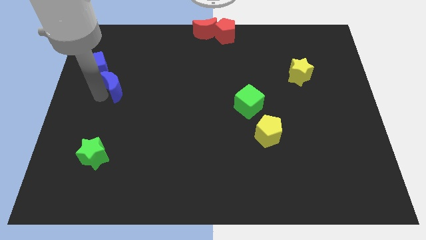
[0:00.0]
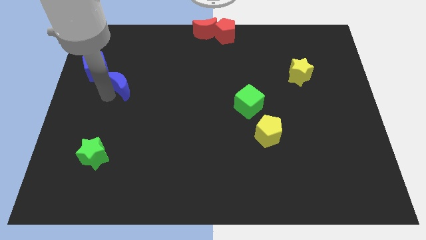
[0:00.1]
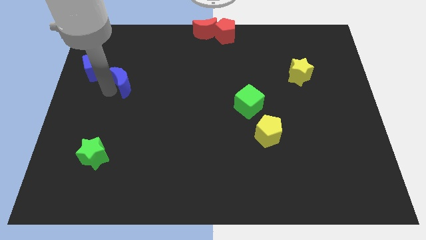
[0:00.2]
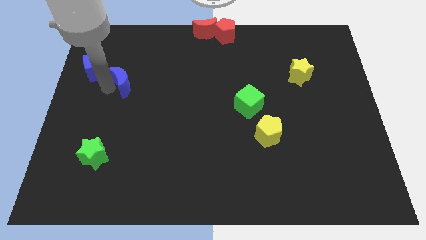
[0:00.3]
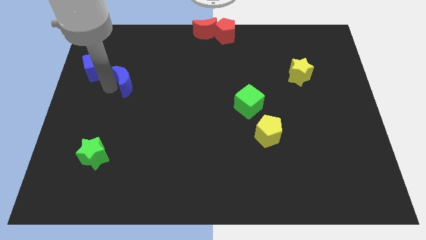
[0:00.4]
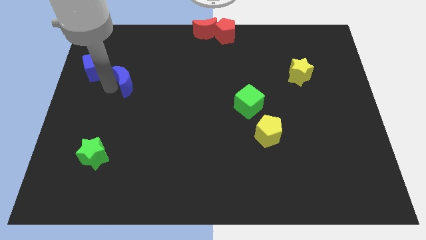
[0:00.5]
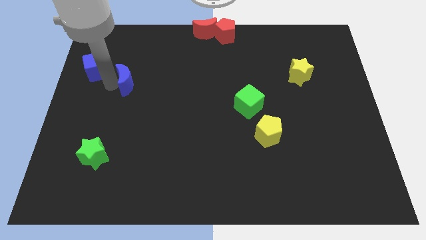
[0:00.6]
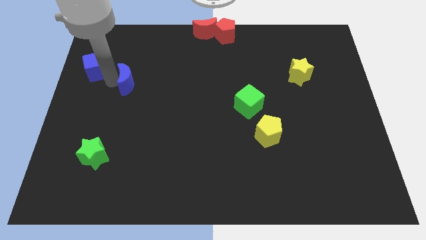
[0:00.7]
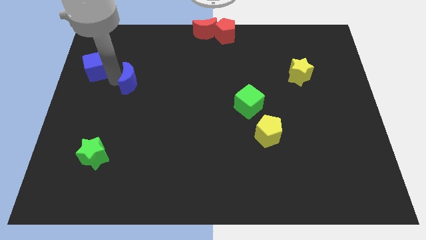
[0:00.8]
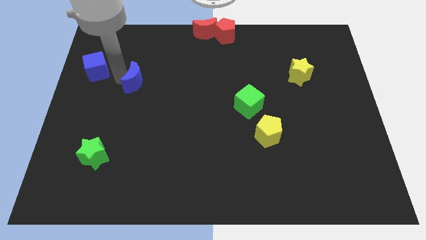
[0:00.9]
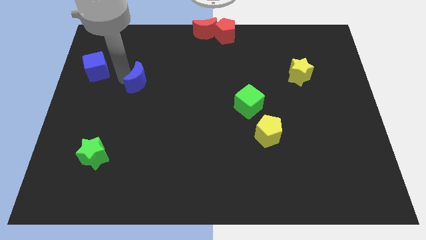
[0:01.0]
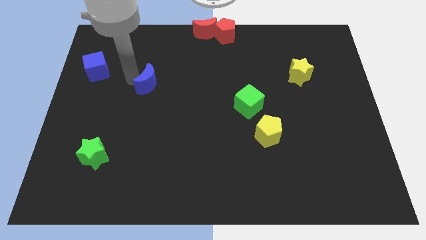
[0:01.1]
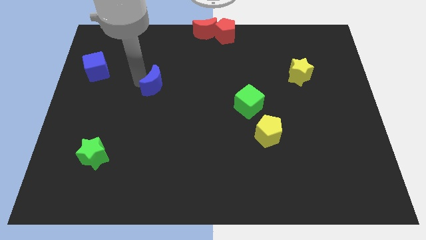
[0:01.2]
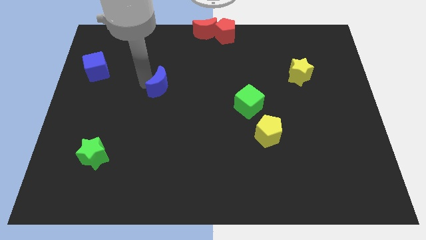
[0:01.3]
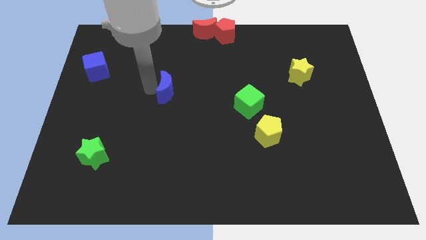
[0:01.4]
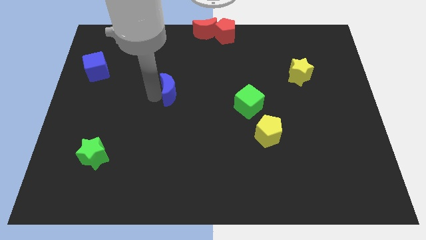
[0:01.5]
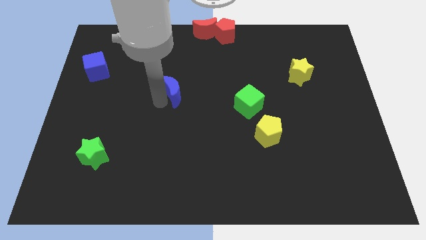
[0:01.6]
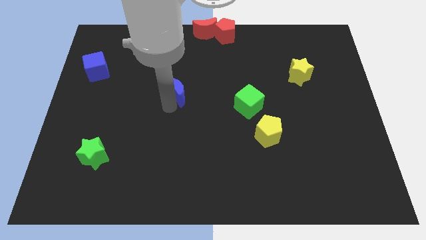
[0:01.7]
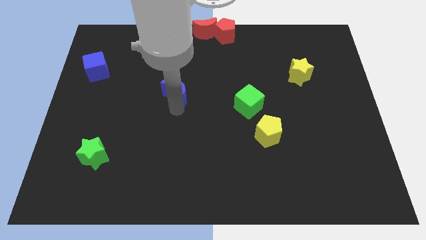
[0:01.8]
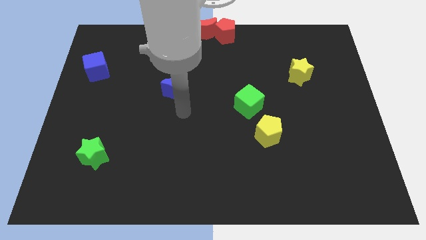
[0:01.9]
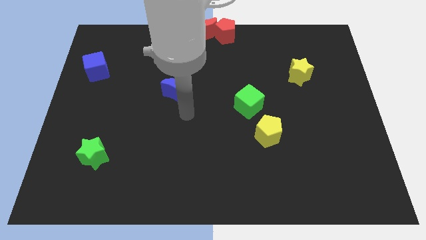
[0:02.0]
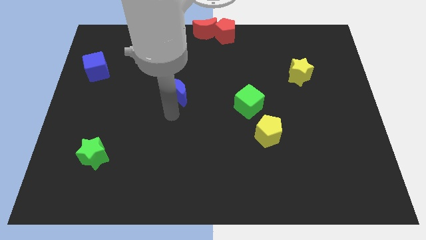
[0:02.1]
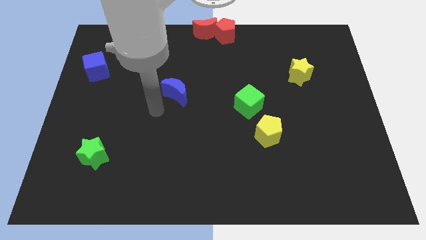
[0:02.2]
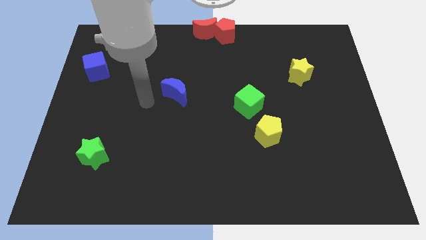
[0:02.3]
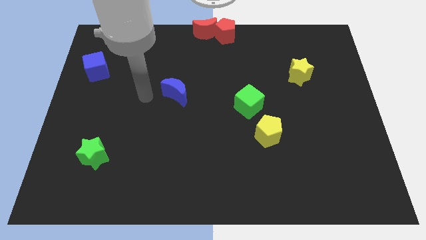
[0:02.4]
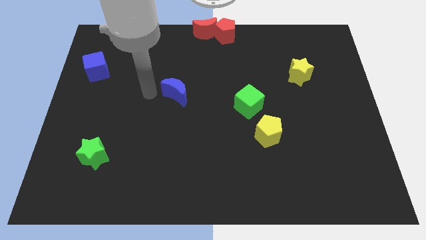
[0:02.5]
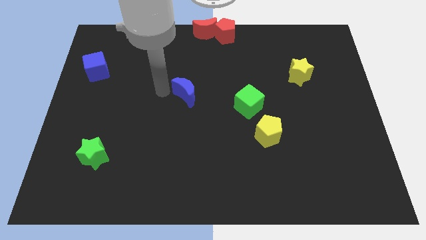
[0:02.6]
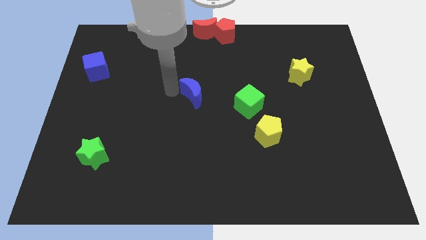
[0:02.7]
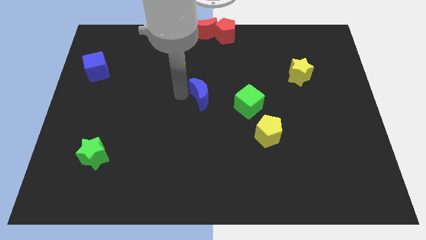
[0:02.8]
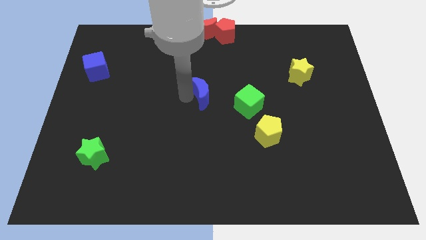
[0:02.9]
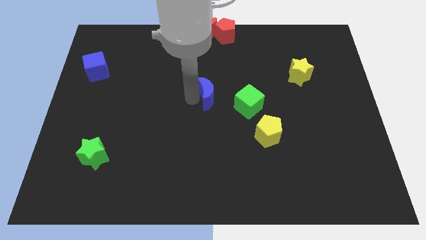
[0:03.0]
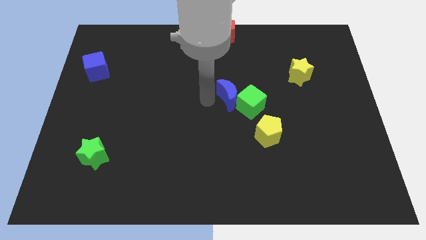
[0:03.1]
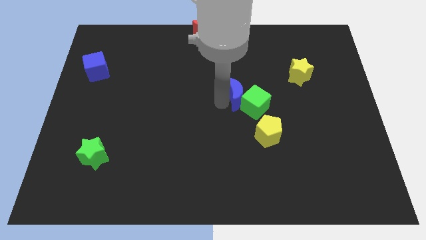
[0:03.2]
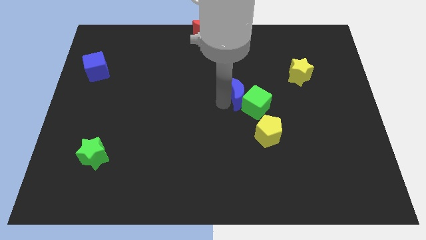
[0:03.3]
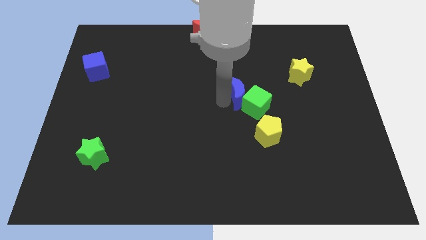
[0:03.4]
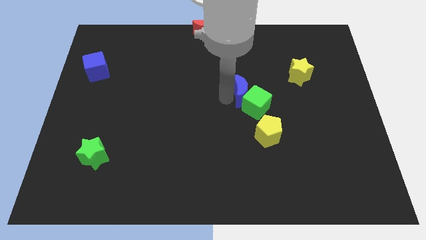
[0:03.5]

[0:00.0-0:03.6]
push the blue moon into green cube

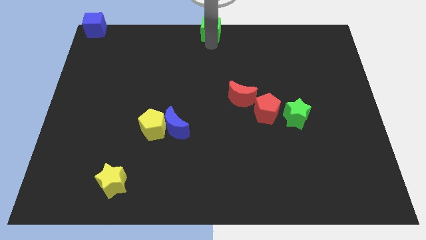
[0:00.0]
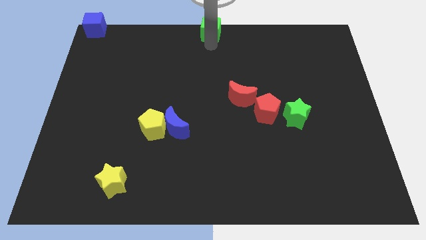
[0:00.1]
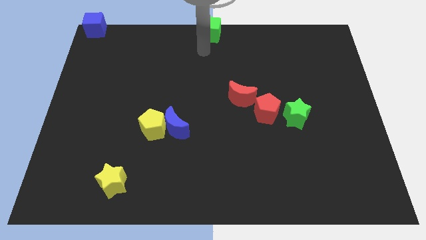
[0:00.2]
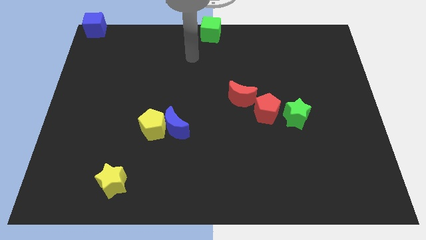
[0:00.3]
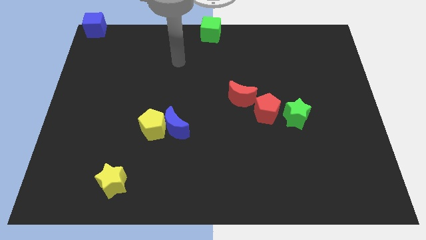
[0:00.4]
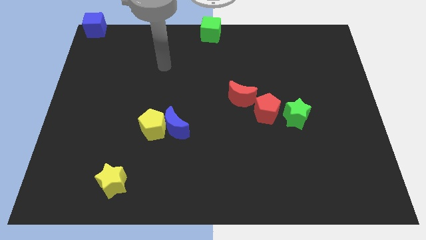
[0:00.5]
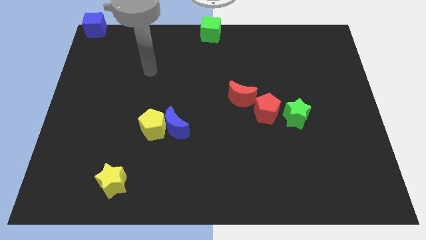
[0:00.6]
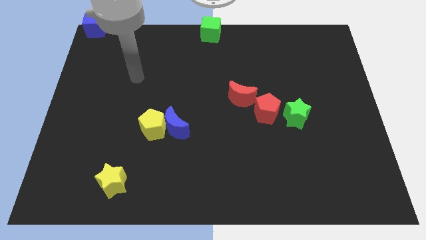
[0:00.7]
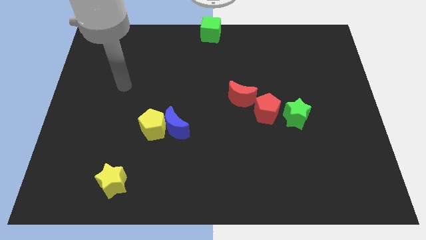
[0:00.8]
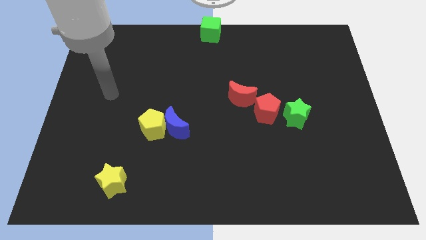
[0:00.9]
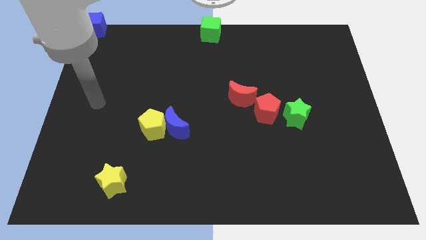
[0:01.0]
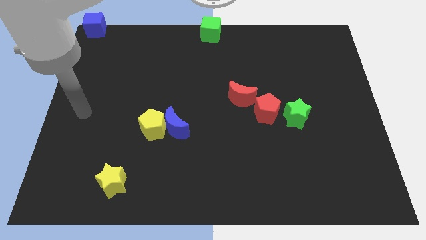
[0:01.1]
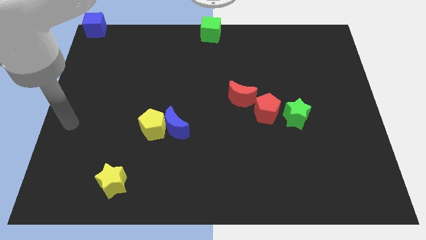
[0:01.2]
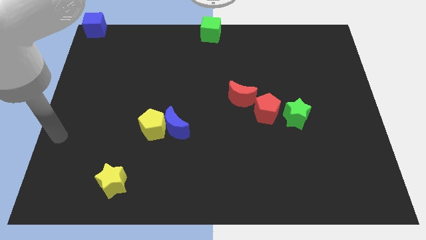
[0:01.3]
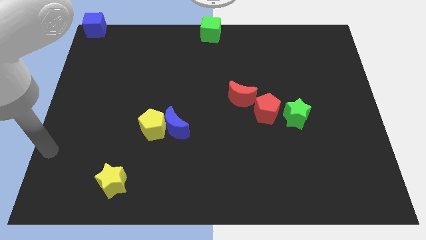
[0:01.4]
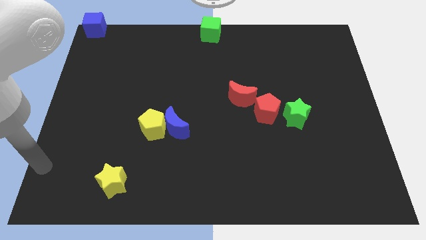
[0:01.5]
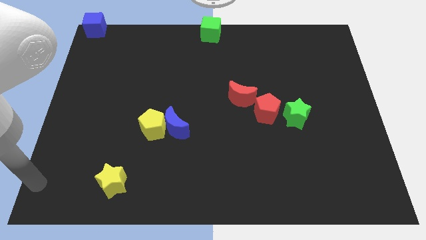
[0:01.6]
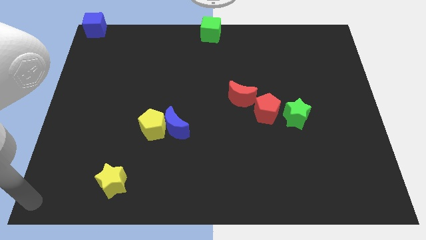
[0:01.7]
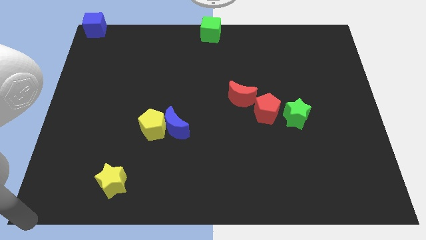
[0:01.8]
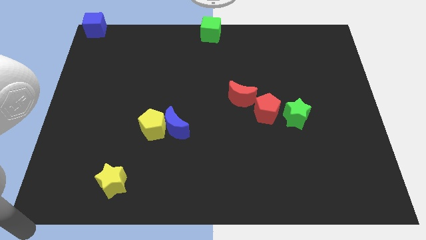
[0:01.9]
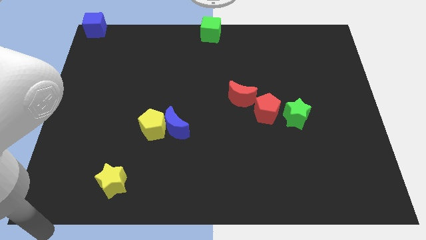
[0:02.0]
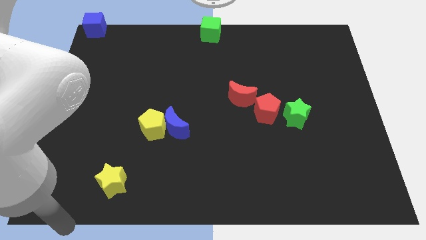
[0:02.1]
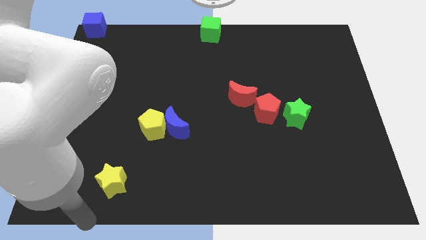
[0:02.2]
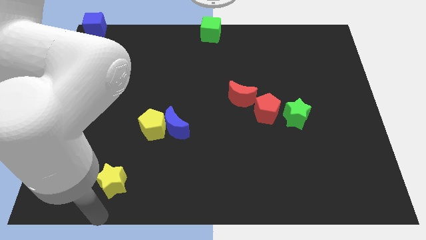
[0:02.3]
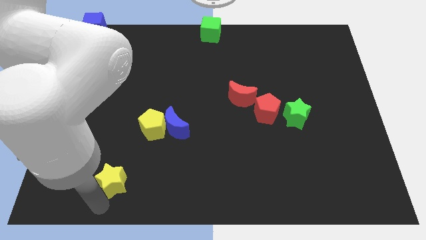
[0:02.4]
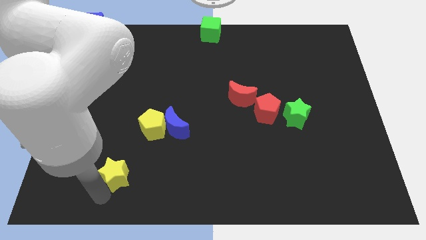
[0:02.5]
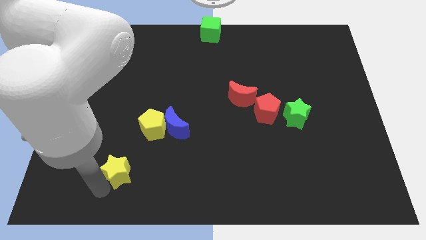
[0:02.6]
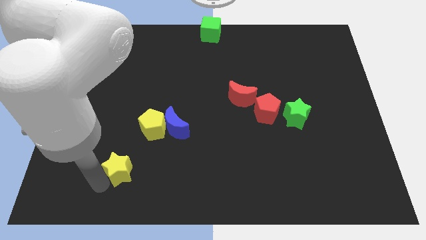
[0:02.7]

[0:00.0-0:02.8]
move your arm away from the green cube

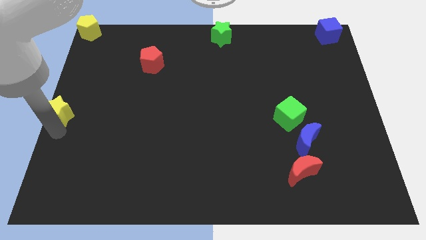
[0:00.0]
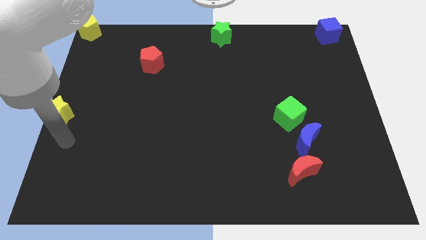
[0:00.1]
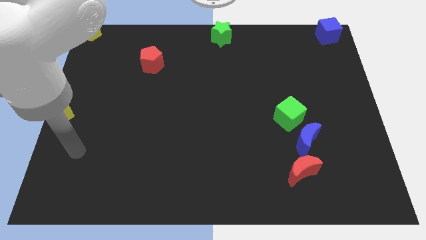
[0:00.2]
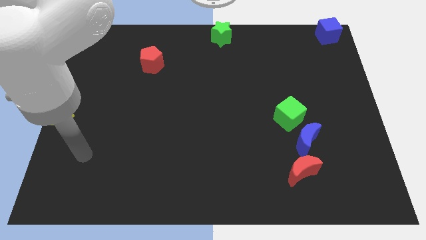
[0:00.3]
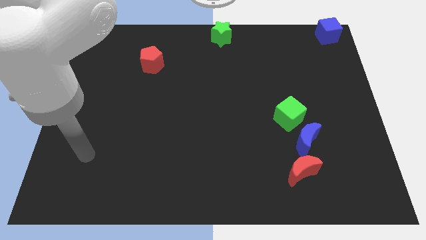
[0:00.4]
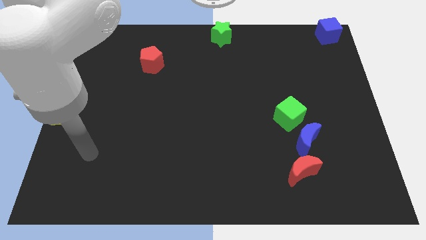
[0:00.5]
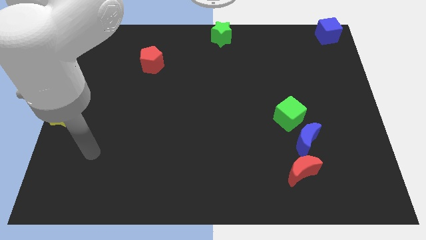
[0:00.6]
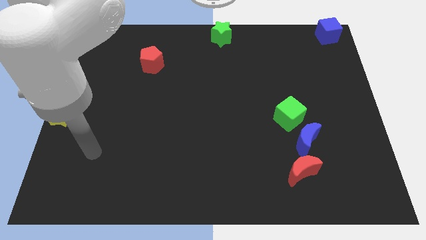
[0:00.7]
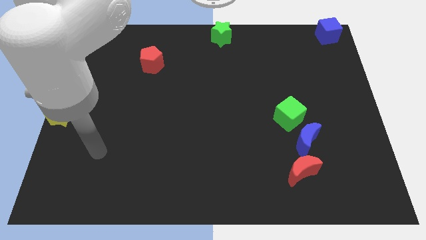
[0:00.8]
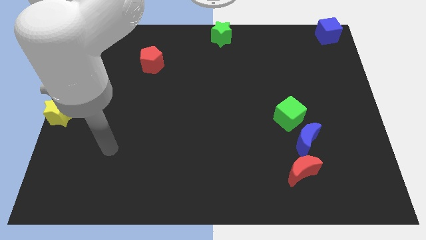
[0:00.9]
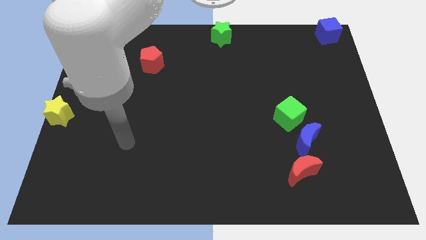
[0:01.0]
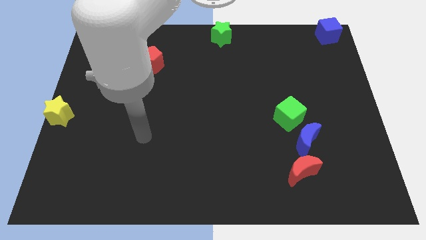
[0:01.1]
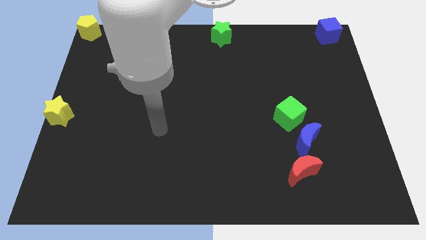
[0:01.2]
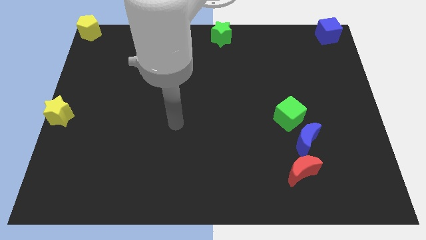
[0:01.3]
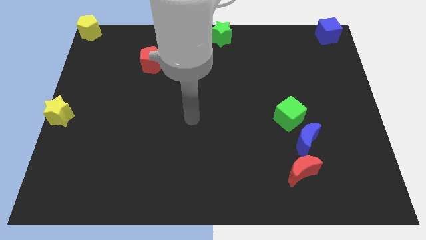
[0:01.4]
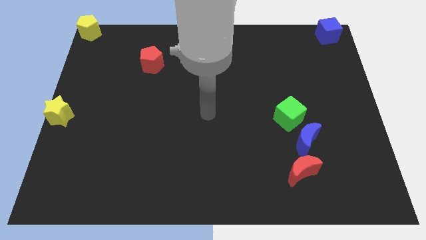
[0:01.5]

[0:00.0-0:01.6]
move your arm away from the yellow star

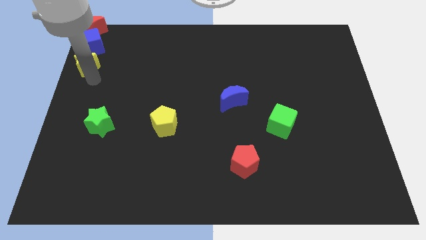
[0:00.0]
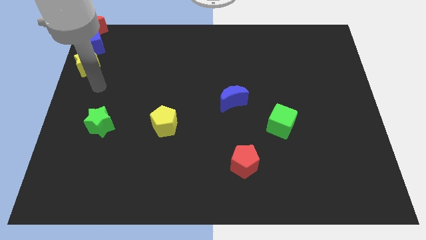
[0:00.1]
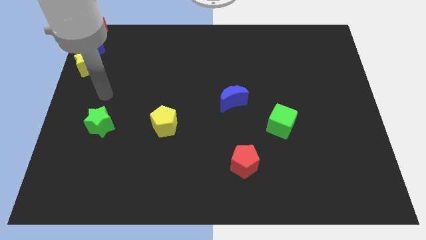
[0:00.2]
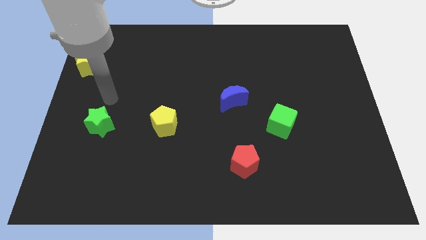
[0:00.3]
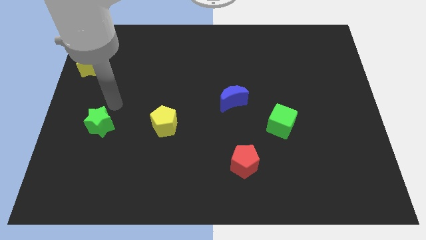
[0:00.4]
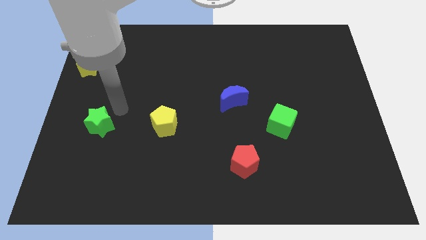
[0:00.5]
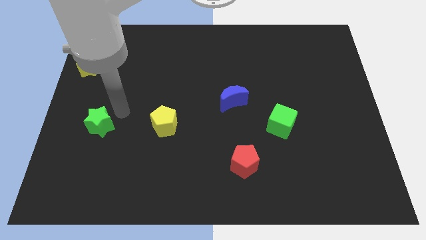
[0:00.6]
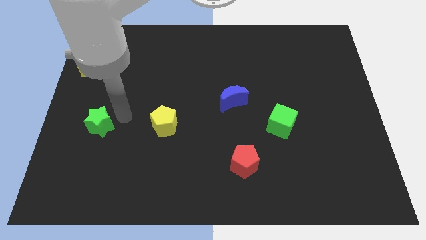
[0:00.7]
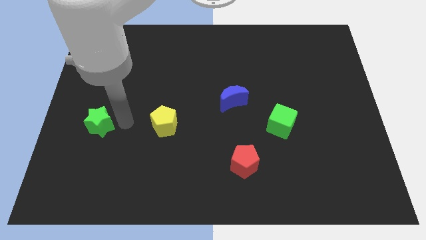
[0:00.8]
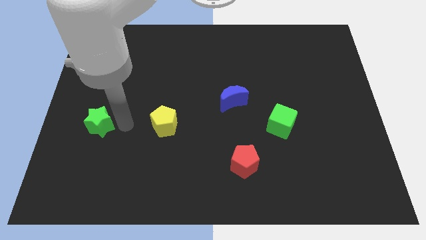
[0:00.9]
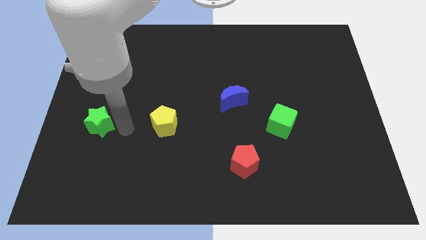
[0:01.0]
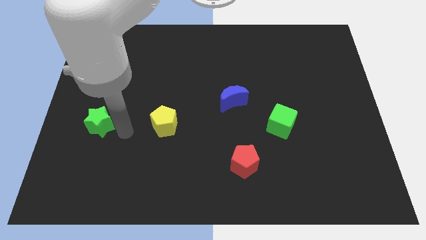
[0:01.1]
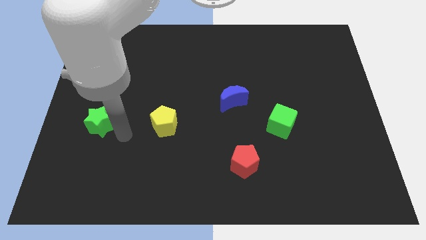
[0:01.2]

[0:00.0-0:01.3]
point your arm at the right of the green star
